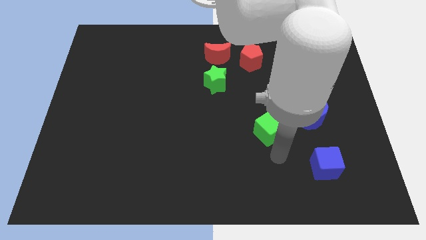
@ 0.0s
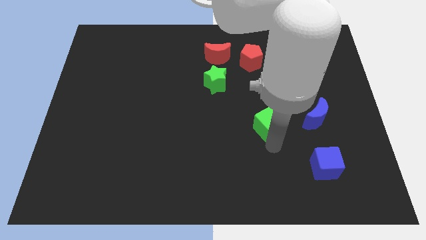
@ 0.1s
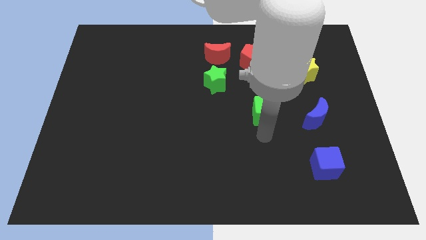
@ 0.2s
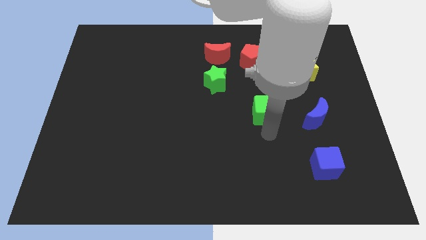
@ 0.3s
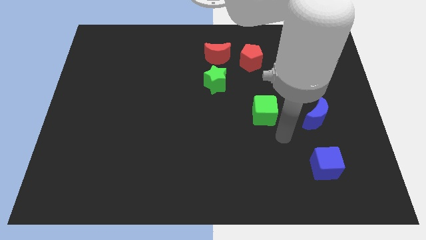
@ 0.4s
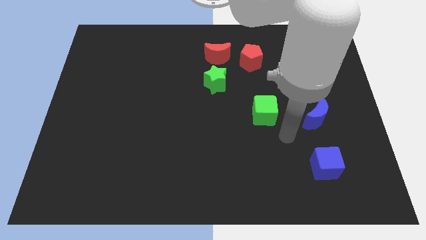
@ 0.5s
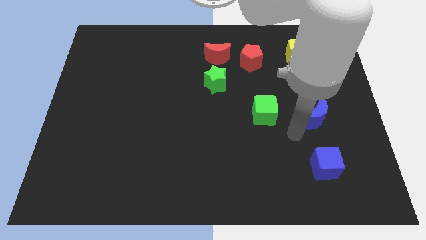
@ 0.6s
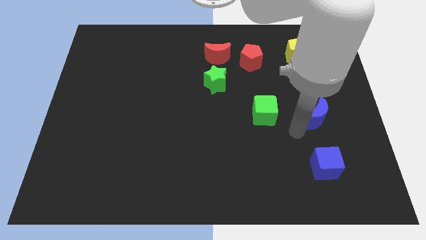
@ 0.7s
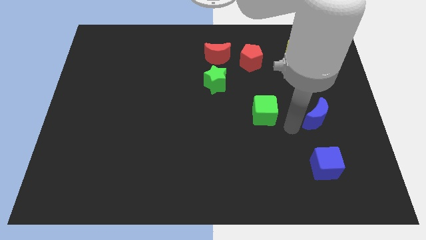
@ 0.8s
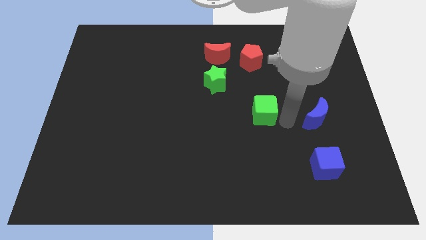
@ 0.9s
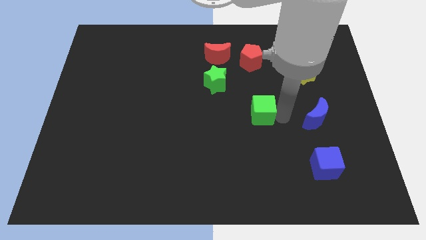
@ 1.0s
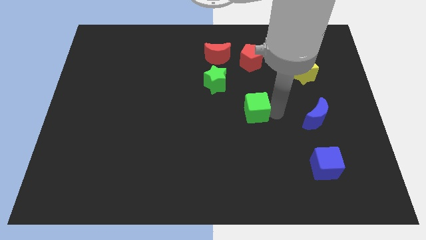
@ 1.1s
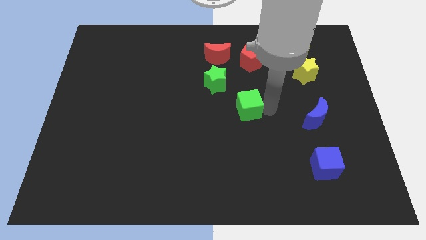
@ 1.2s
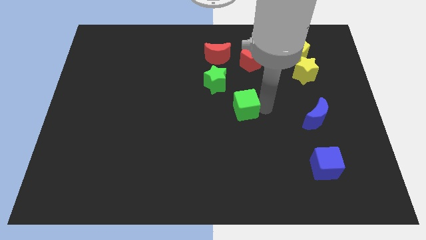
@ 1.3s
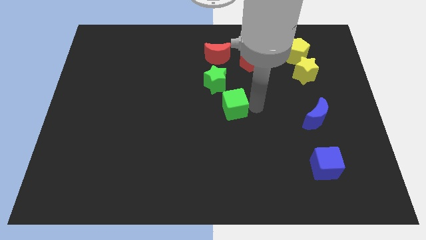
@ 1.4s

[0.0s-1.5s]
move the green cube towards the right bottom of the green star

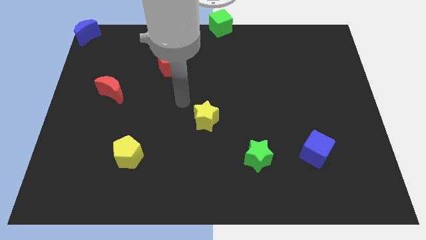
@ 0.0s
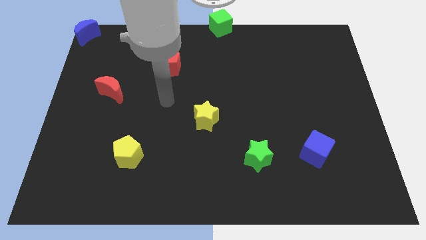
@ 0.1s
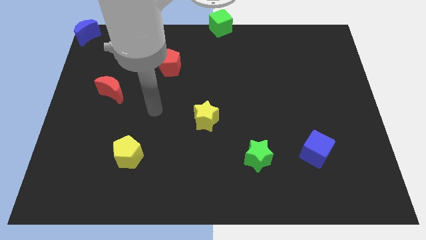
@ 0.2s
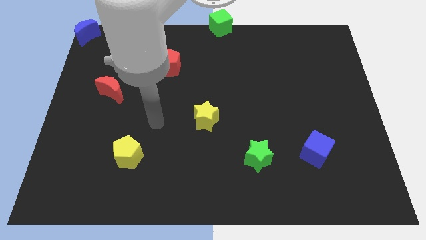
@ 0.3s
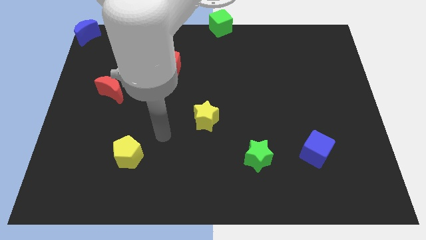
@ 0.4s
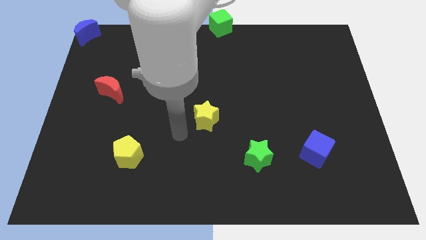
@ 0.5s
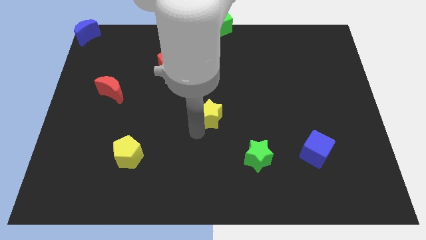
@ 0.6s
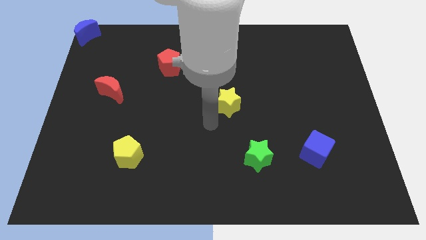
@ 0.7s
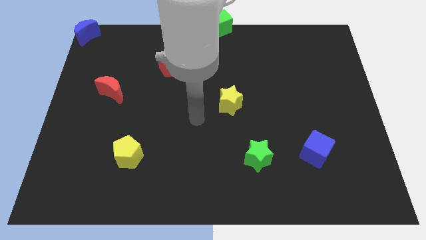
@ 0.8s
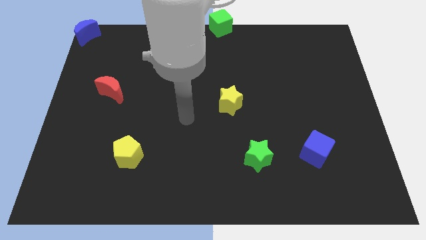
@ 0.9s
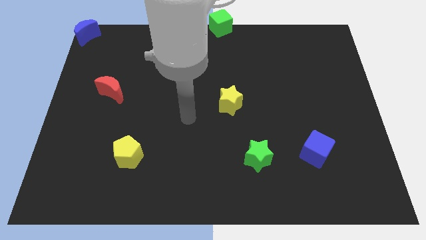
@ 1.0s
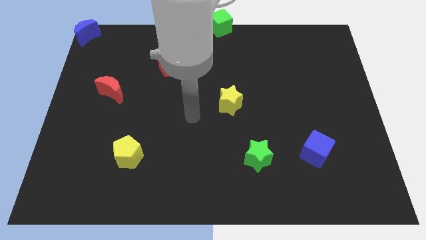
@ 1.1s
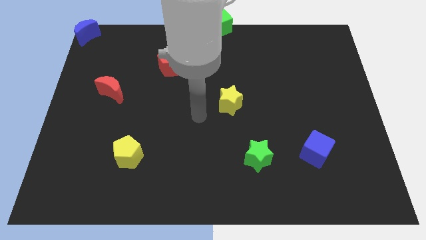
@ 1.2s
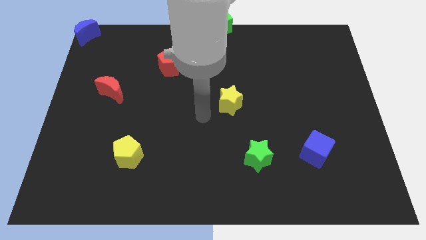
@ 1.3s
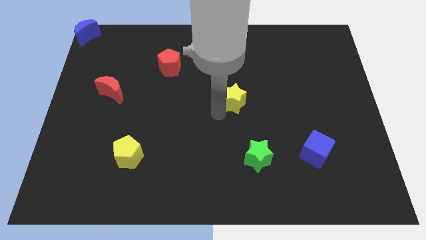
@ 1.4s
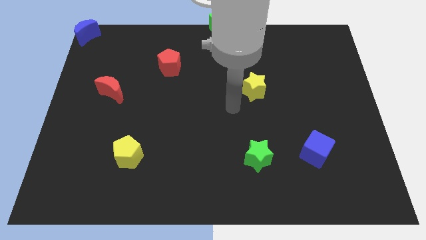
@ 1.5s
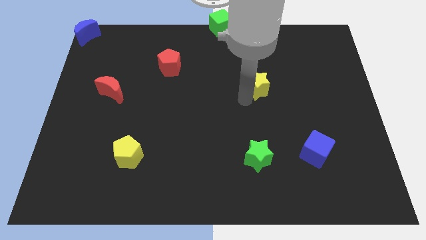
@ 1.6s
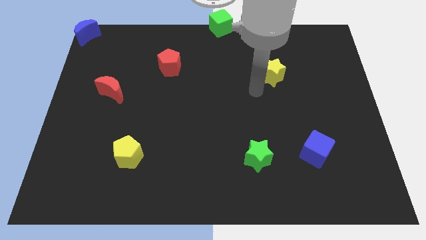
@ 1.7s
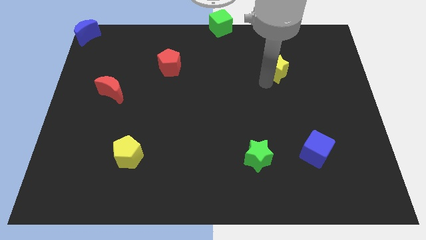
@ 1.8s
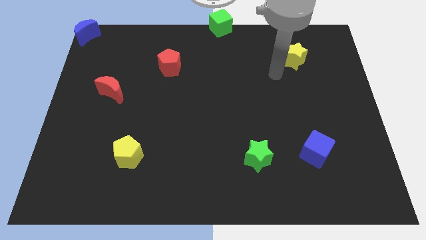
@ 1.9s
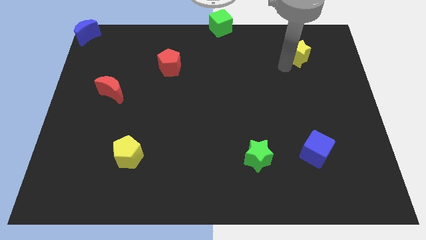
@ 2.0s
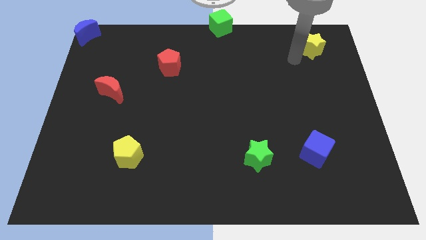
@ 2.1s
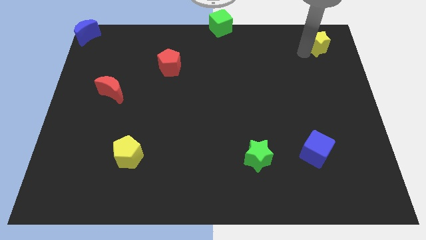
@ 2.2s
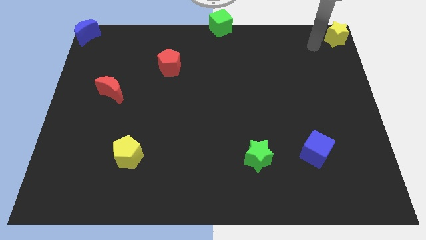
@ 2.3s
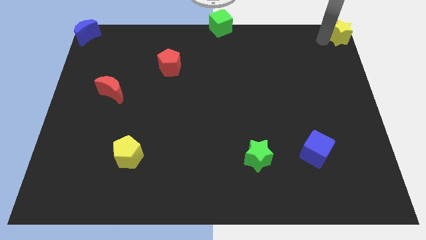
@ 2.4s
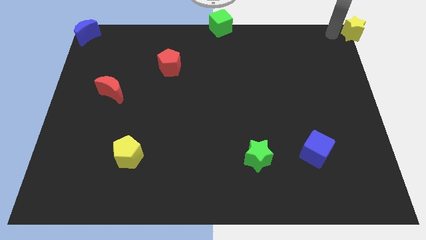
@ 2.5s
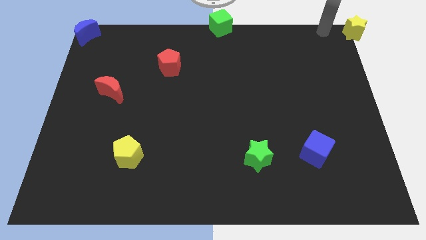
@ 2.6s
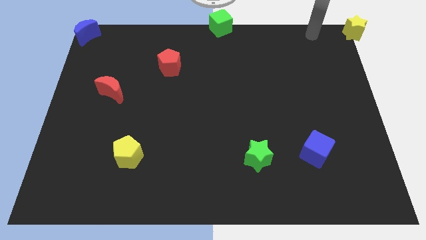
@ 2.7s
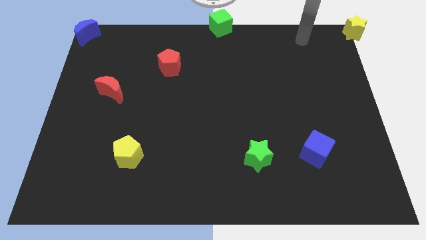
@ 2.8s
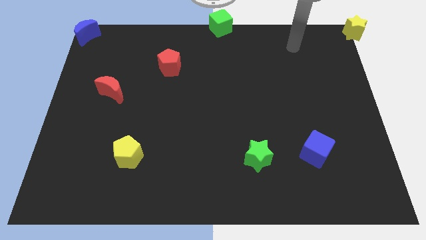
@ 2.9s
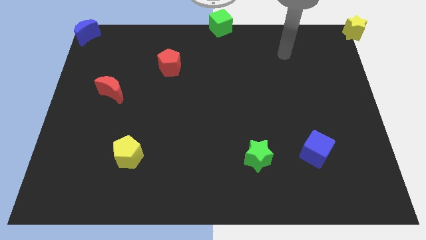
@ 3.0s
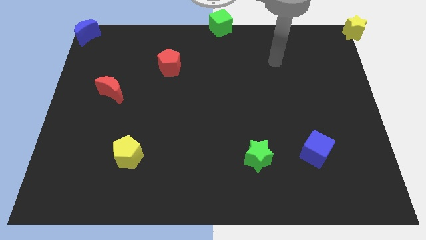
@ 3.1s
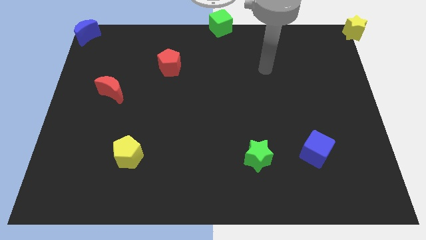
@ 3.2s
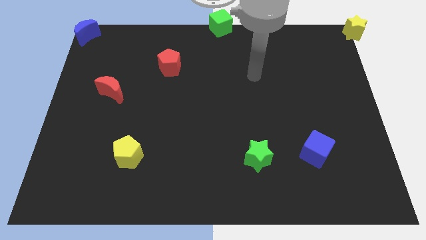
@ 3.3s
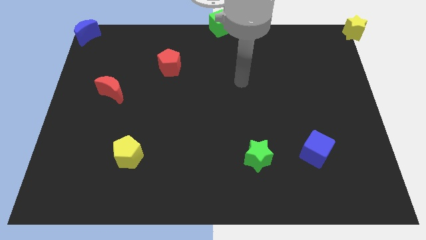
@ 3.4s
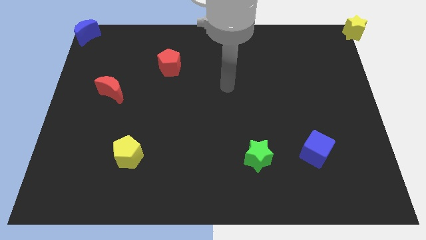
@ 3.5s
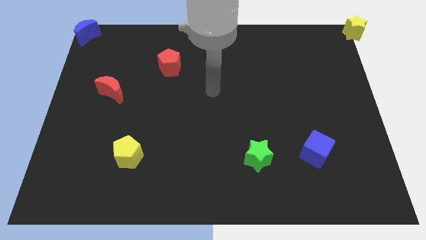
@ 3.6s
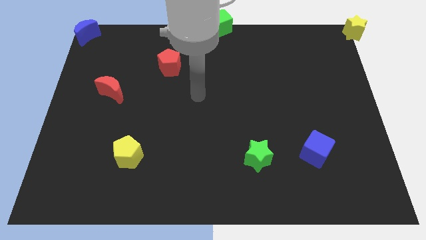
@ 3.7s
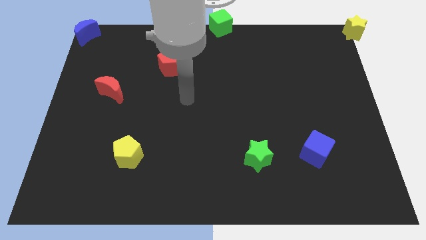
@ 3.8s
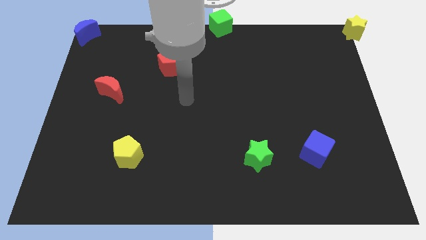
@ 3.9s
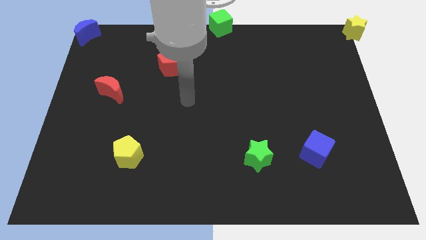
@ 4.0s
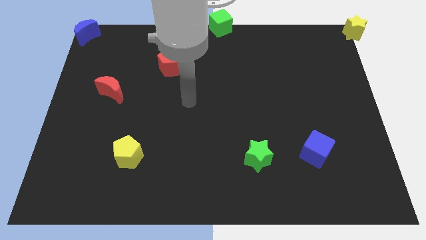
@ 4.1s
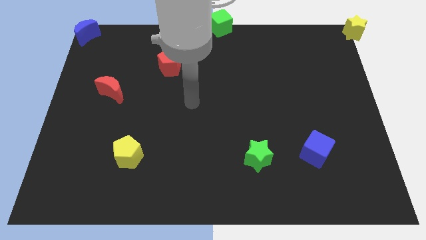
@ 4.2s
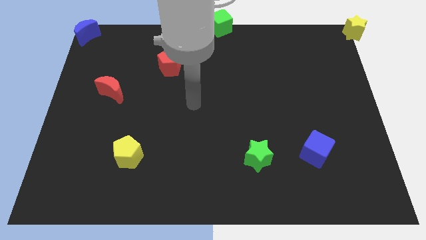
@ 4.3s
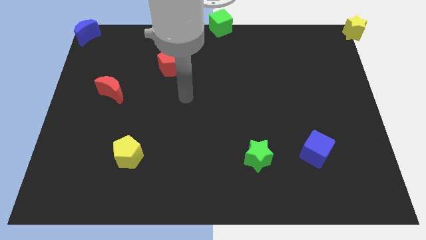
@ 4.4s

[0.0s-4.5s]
push the yellow star to the top right corner of the board

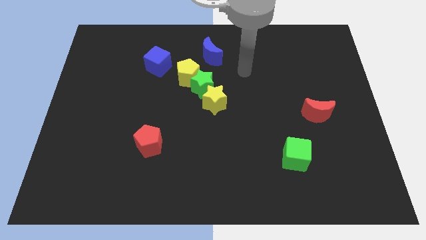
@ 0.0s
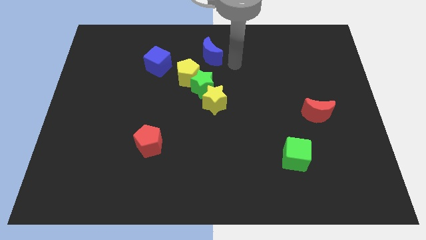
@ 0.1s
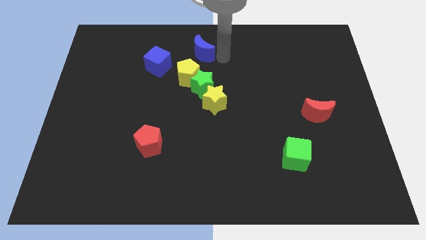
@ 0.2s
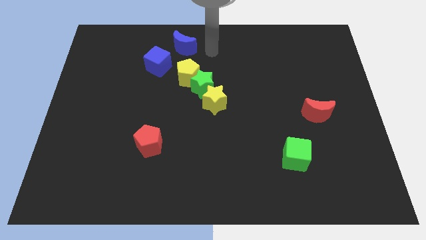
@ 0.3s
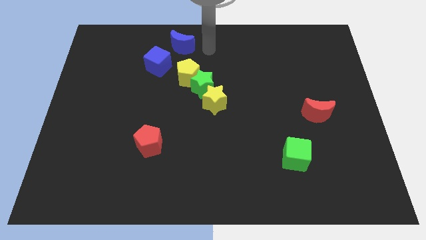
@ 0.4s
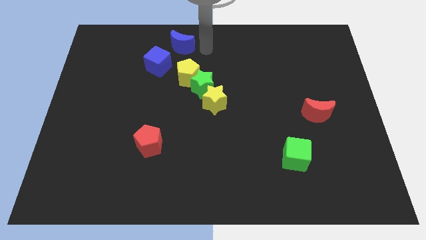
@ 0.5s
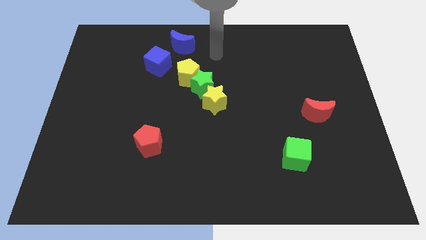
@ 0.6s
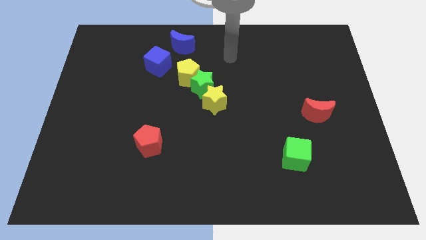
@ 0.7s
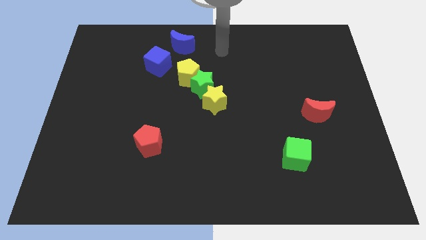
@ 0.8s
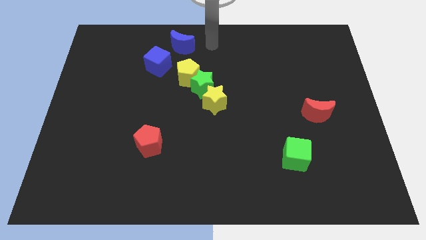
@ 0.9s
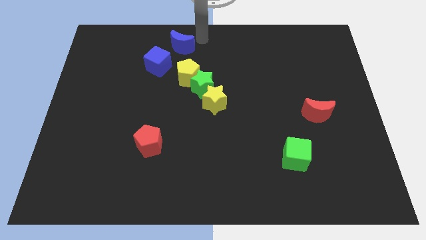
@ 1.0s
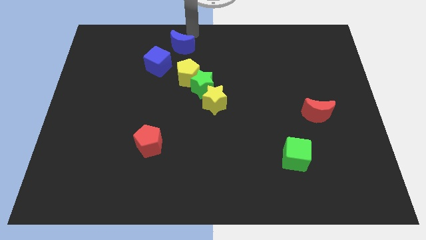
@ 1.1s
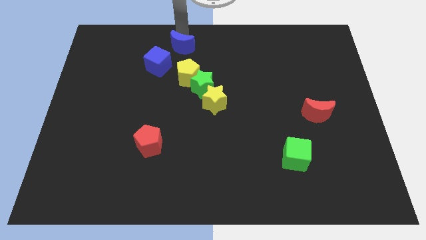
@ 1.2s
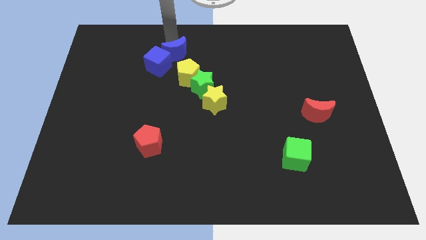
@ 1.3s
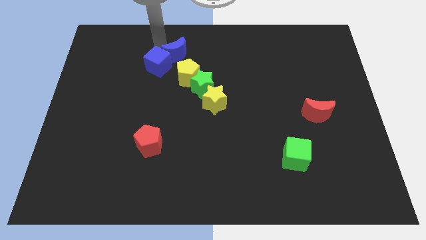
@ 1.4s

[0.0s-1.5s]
move blue crescent horizontally

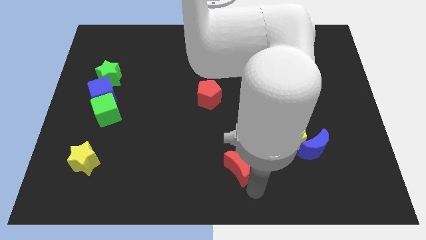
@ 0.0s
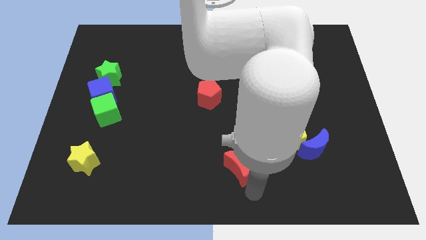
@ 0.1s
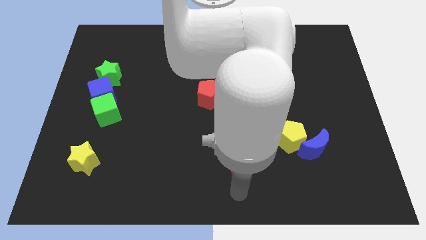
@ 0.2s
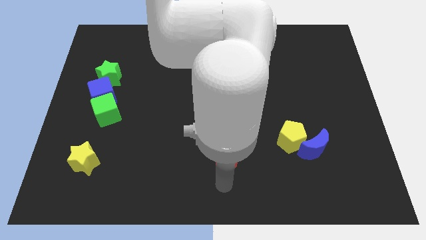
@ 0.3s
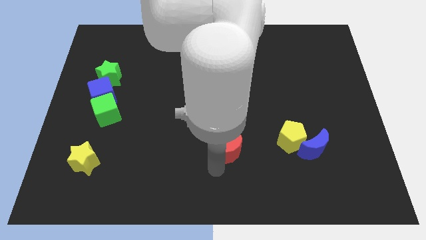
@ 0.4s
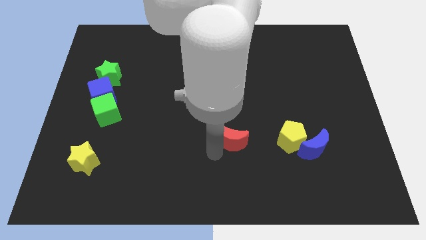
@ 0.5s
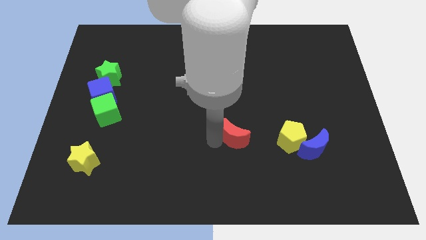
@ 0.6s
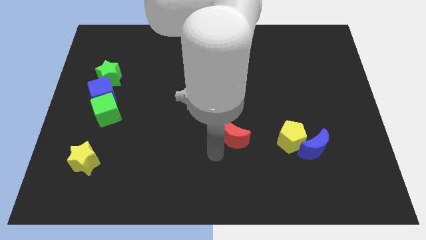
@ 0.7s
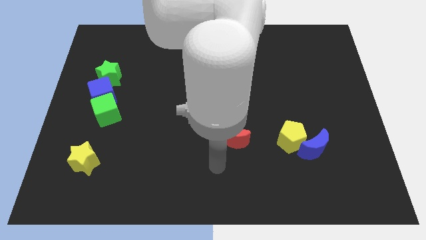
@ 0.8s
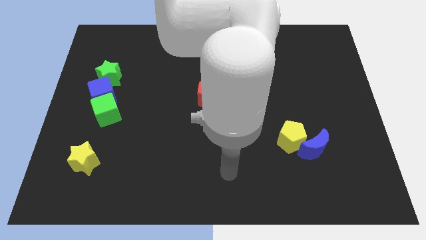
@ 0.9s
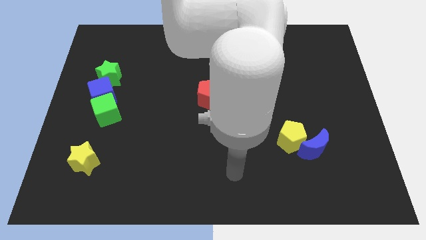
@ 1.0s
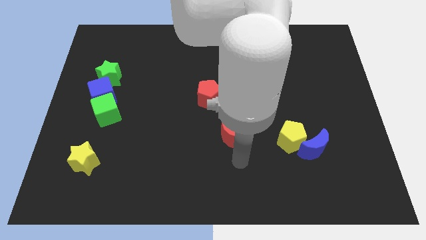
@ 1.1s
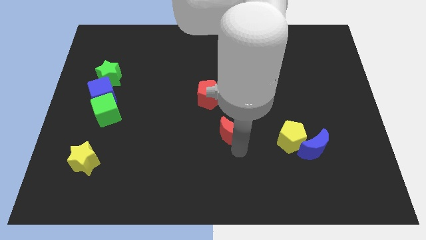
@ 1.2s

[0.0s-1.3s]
move the red moon to the left side of the yellow pentagon
